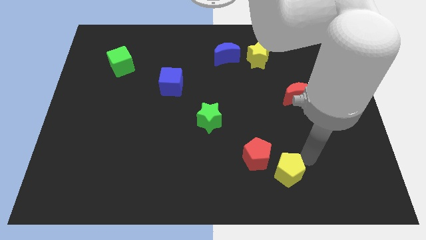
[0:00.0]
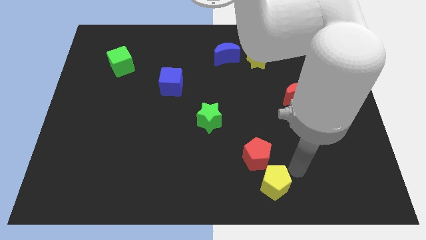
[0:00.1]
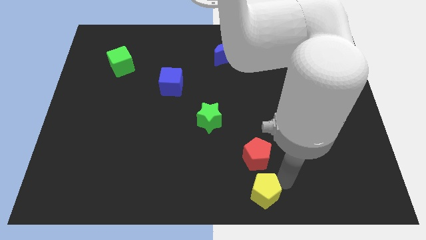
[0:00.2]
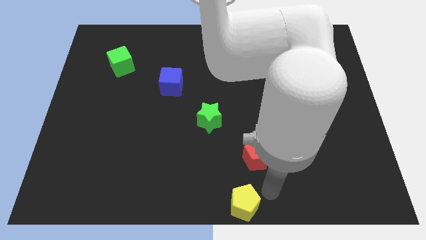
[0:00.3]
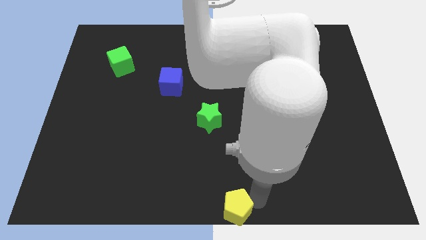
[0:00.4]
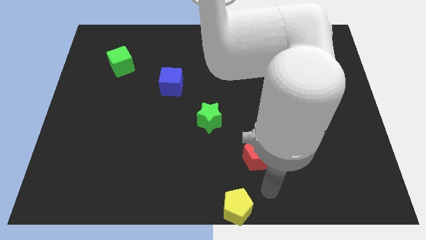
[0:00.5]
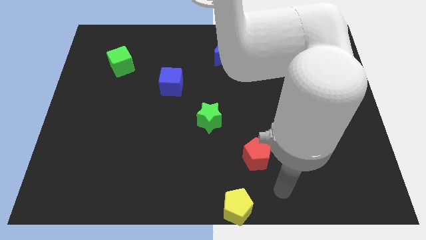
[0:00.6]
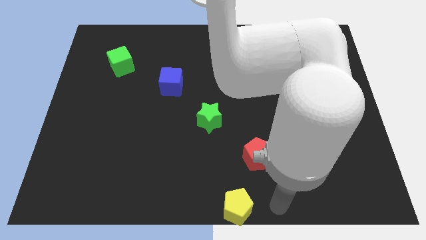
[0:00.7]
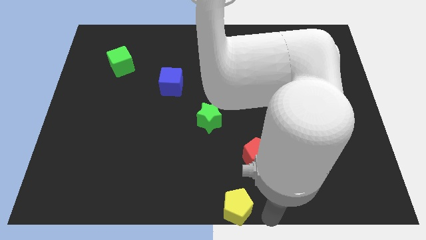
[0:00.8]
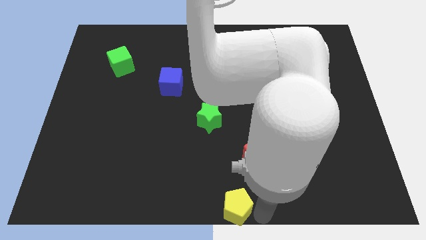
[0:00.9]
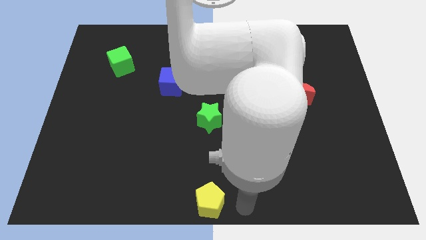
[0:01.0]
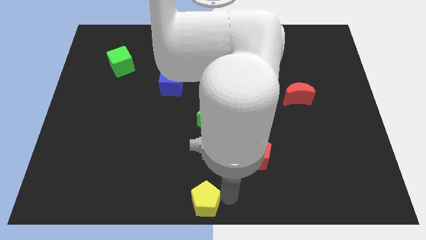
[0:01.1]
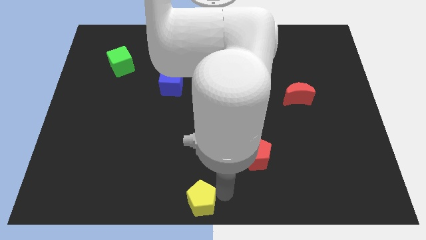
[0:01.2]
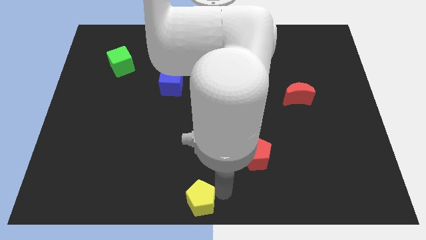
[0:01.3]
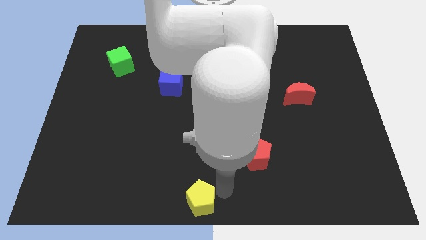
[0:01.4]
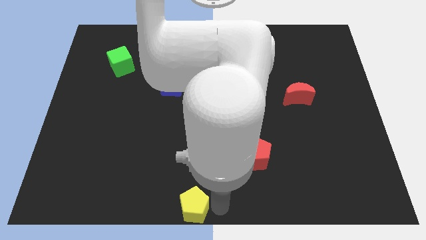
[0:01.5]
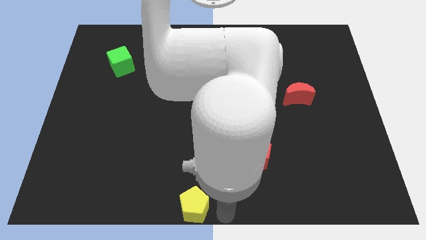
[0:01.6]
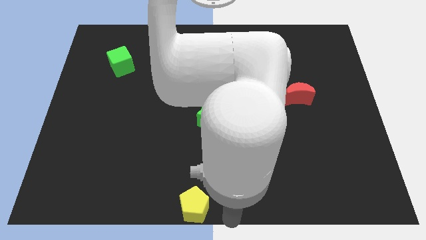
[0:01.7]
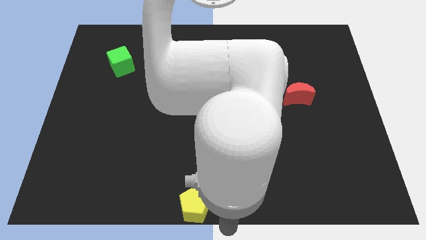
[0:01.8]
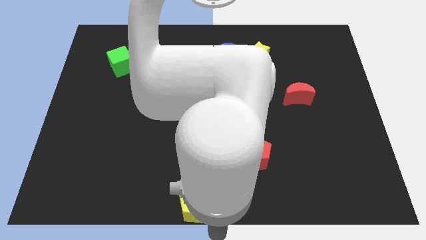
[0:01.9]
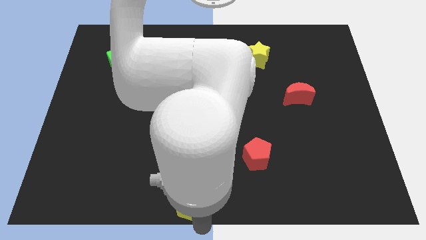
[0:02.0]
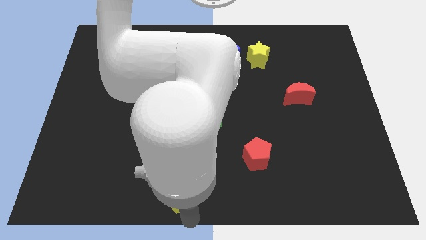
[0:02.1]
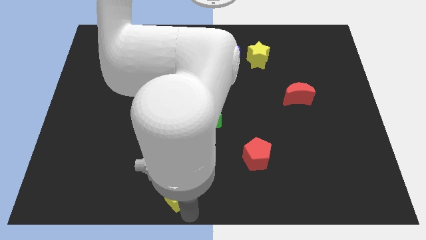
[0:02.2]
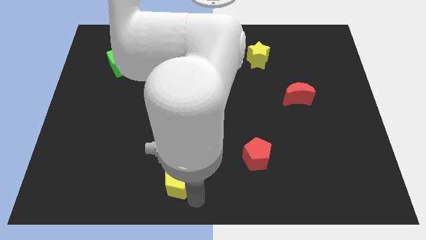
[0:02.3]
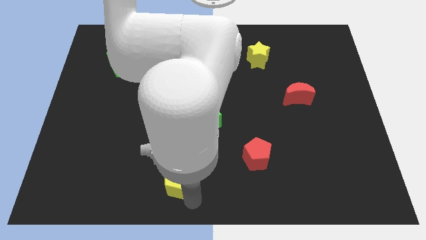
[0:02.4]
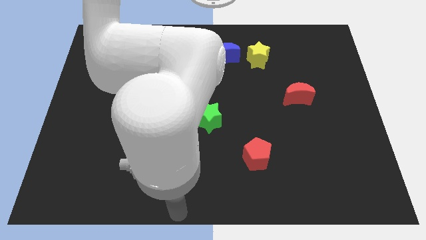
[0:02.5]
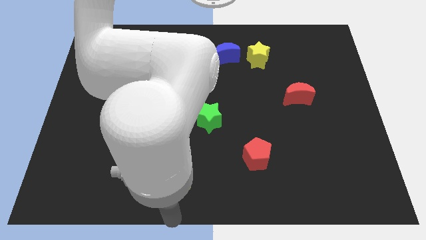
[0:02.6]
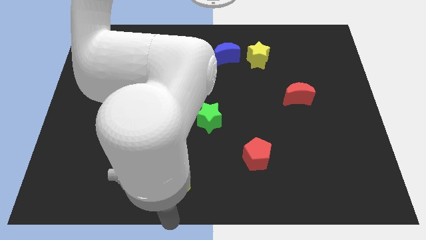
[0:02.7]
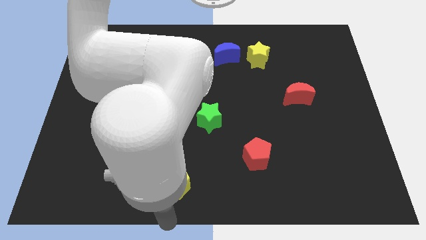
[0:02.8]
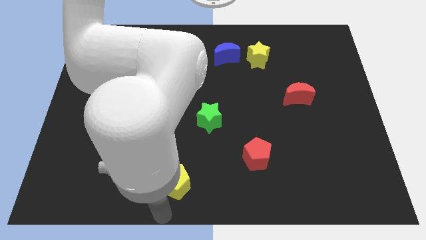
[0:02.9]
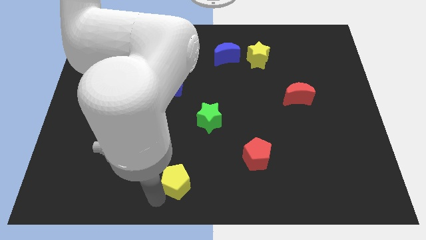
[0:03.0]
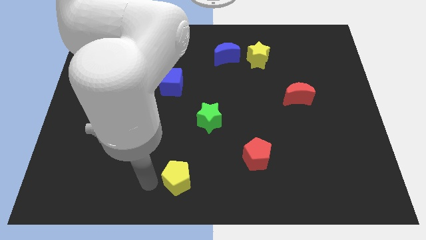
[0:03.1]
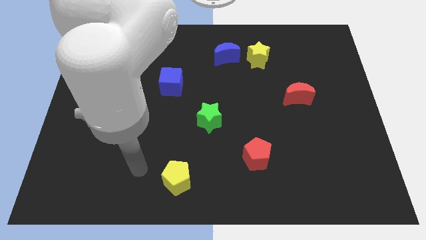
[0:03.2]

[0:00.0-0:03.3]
move the yellow pentagon towards the bottom center of the board

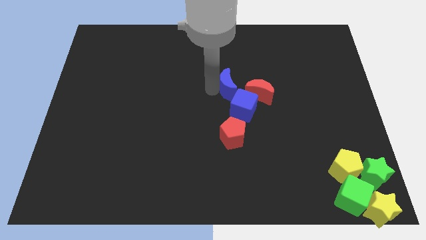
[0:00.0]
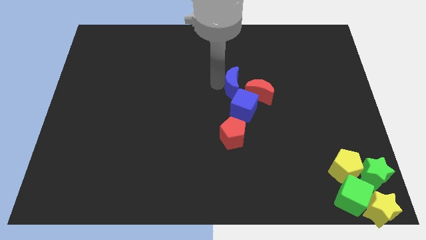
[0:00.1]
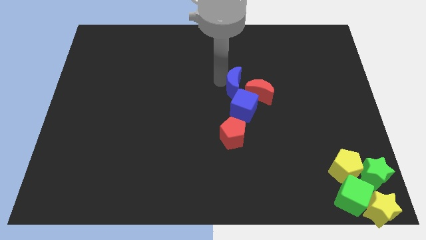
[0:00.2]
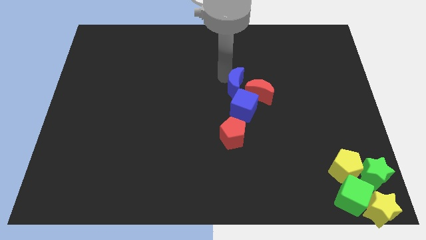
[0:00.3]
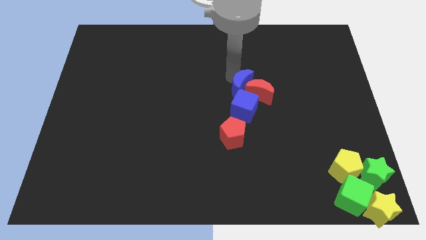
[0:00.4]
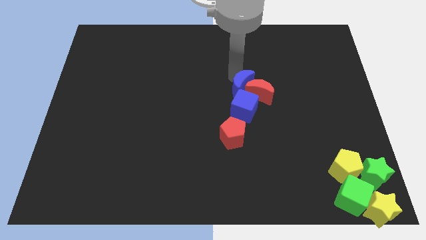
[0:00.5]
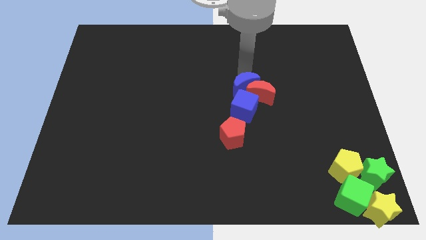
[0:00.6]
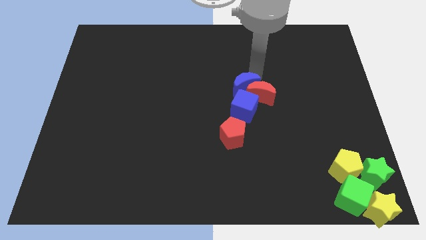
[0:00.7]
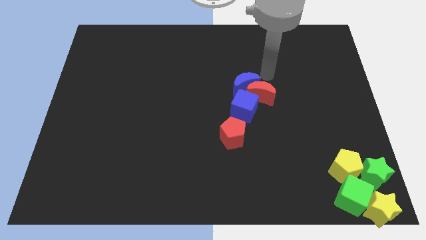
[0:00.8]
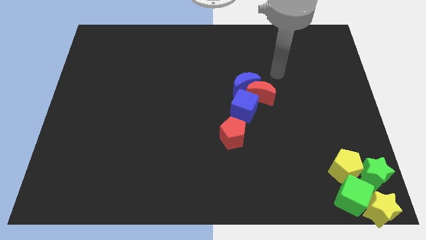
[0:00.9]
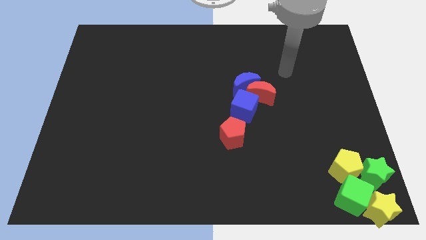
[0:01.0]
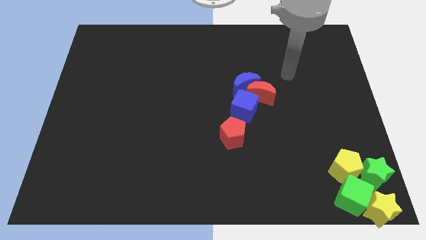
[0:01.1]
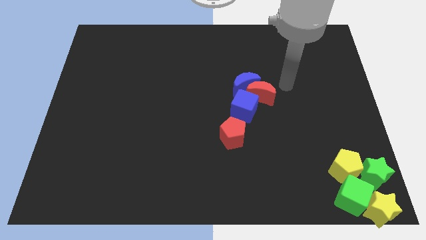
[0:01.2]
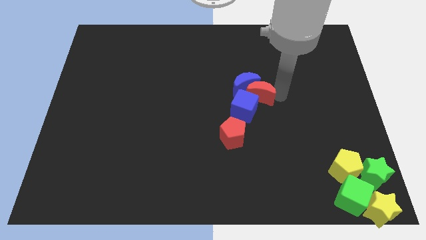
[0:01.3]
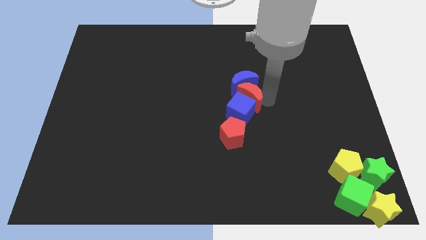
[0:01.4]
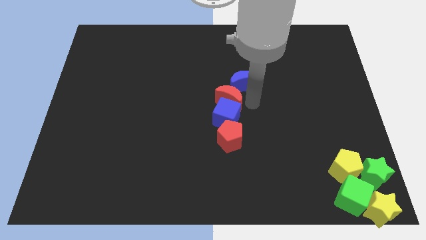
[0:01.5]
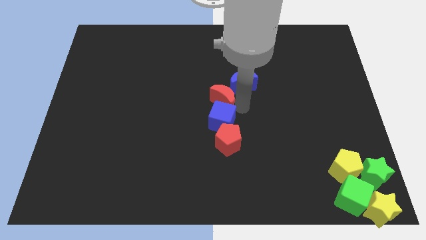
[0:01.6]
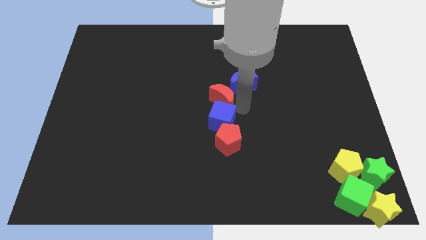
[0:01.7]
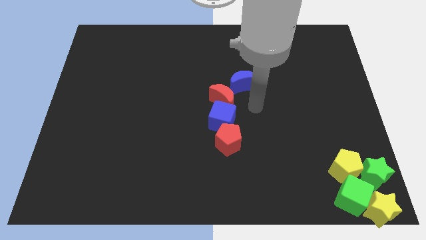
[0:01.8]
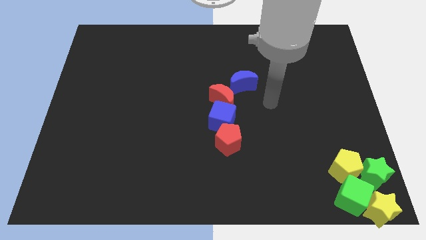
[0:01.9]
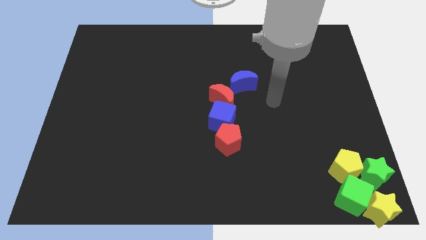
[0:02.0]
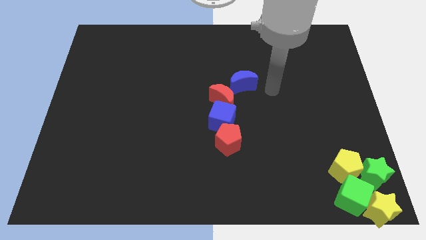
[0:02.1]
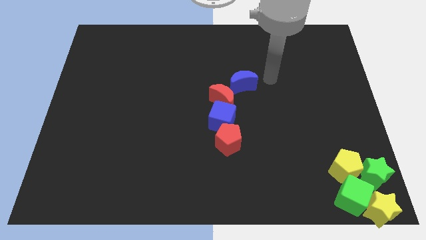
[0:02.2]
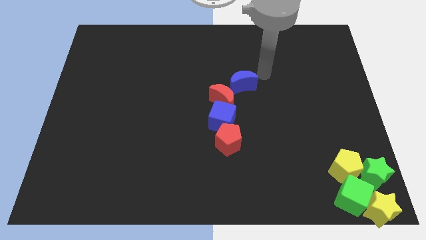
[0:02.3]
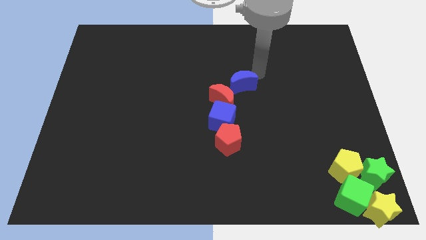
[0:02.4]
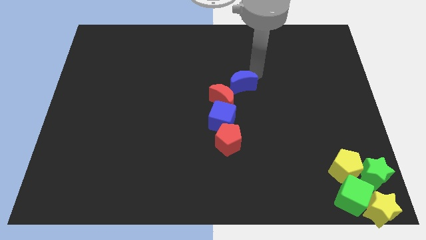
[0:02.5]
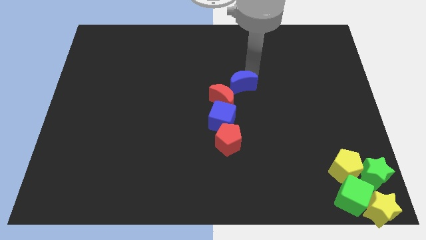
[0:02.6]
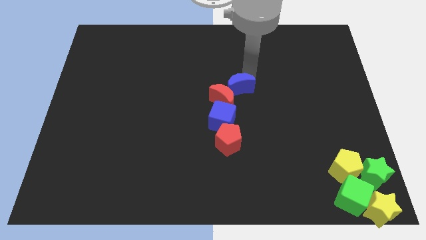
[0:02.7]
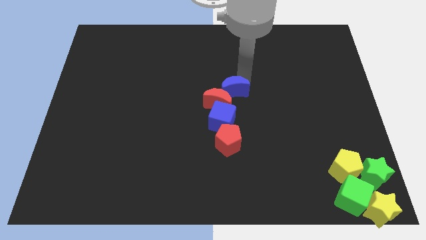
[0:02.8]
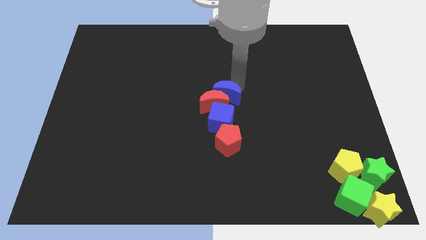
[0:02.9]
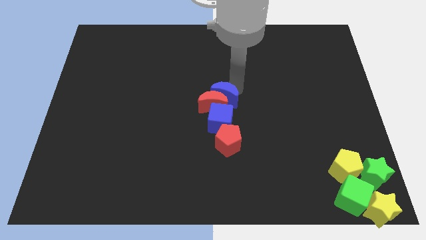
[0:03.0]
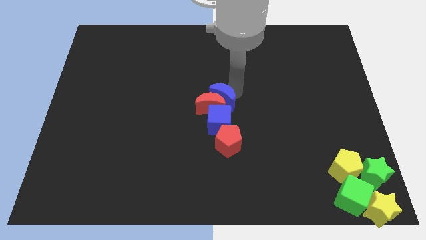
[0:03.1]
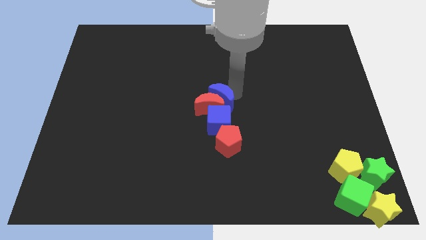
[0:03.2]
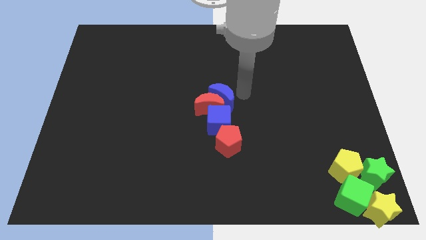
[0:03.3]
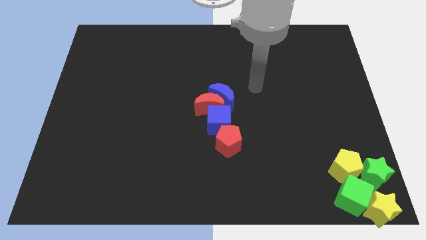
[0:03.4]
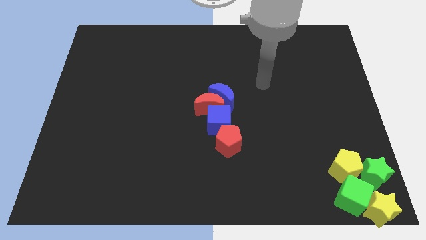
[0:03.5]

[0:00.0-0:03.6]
put the blue moon at the top right side of the red moon

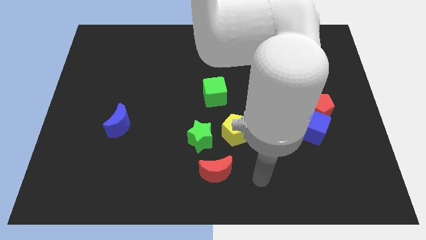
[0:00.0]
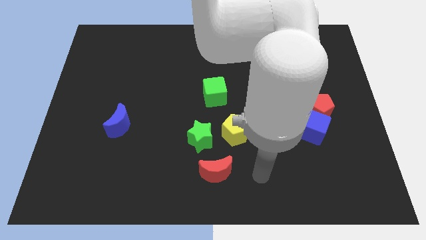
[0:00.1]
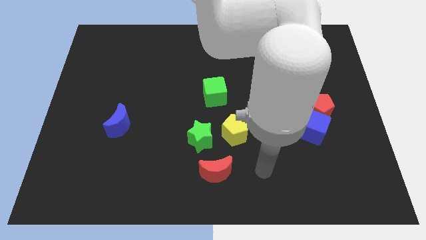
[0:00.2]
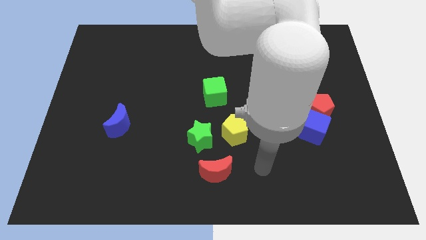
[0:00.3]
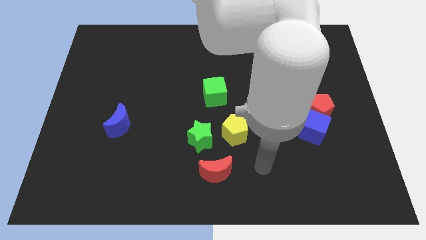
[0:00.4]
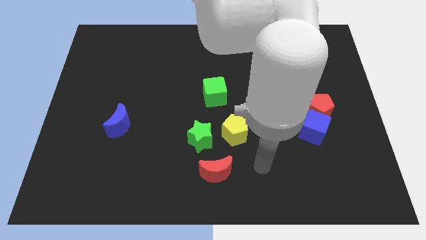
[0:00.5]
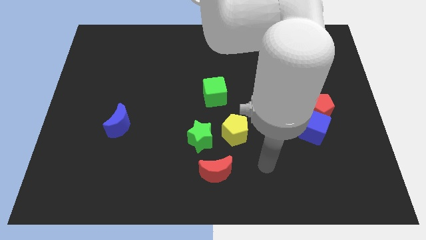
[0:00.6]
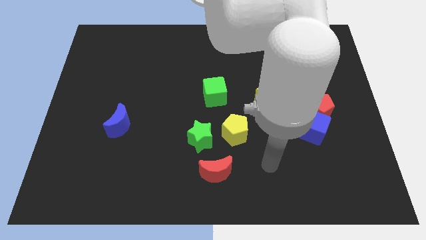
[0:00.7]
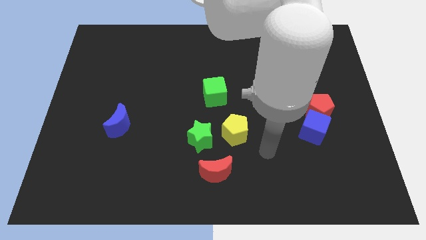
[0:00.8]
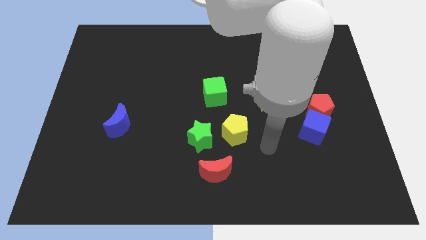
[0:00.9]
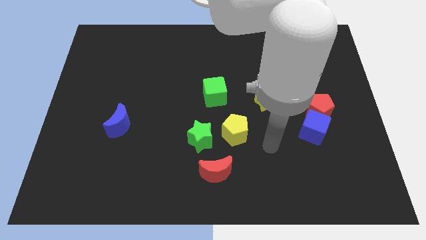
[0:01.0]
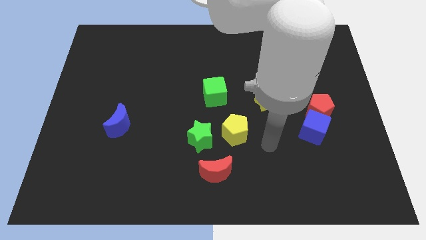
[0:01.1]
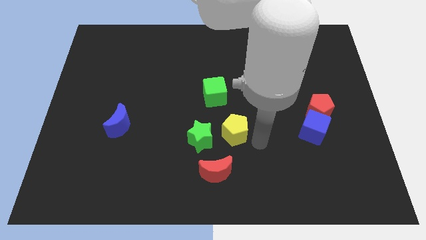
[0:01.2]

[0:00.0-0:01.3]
point your arm at the bottom left side of yellow pentagon

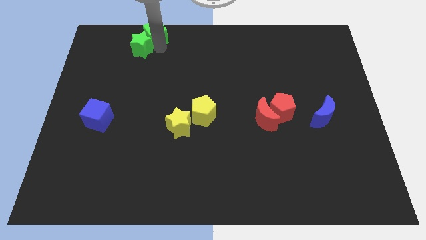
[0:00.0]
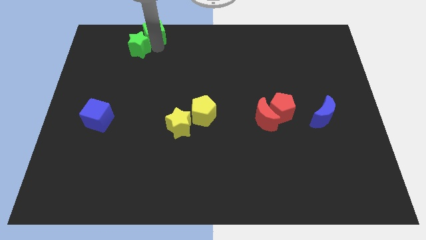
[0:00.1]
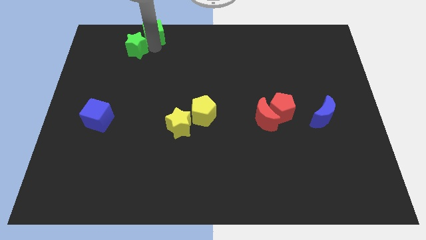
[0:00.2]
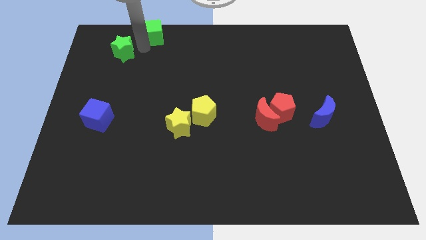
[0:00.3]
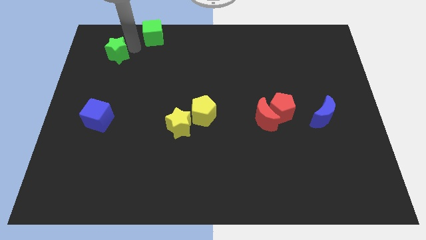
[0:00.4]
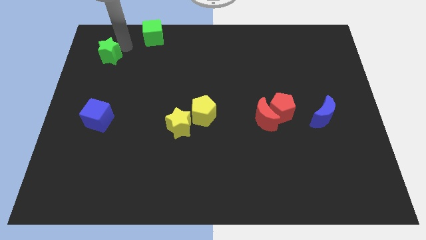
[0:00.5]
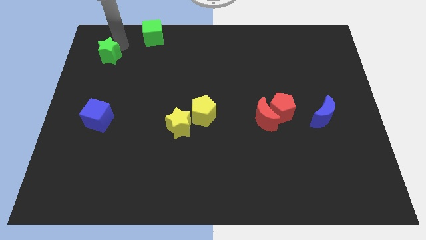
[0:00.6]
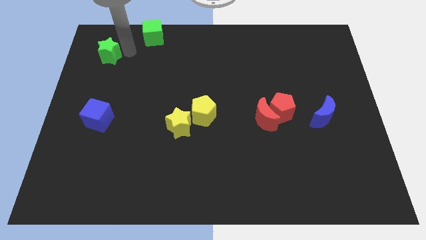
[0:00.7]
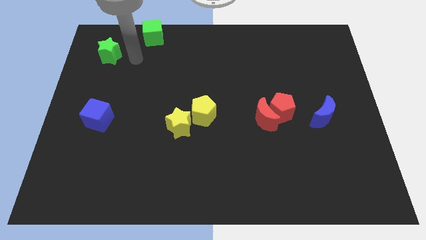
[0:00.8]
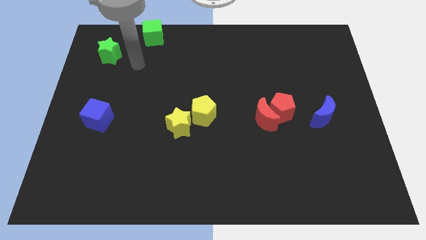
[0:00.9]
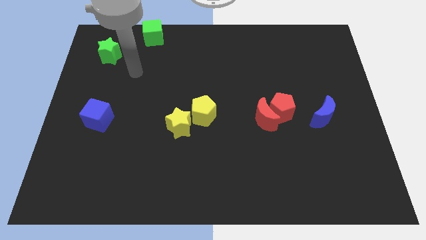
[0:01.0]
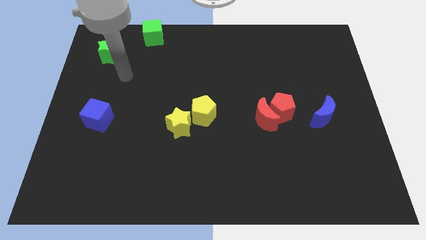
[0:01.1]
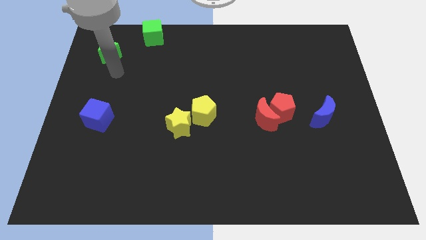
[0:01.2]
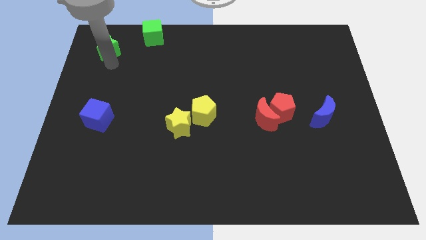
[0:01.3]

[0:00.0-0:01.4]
separate the green star and green cube
